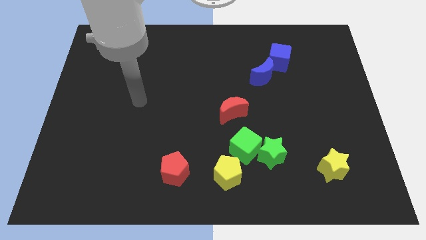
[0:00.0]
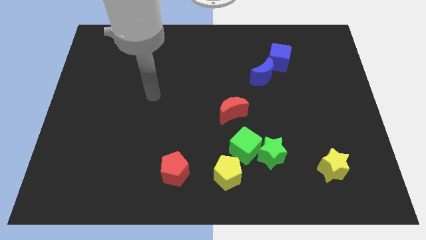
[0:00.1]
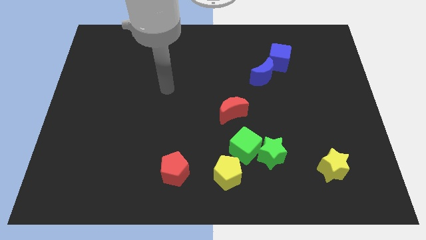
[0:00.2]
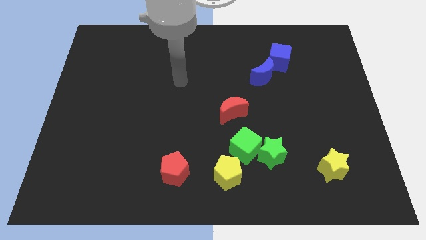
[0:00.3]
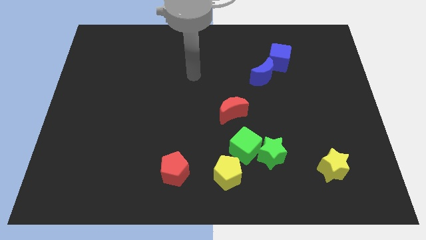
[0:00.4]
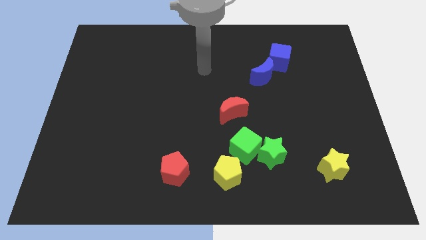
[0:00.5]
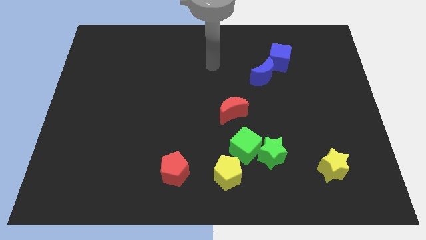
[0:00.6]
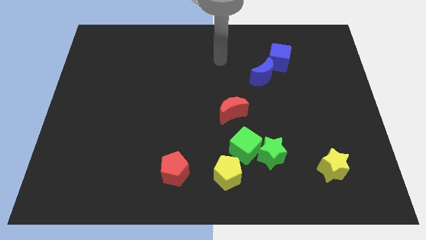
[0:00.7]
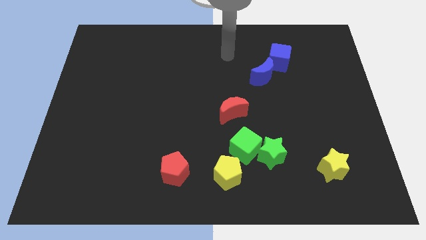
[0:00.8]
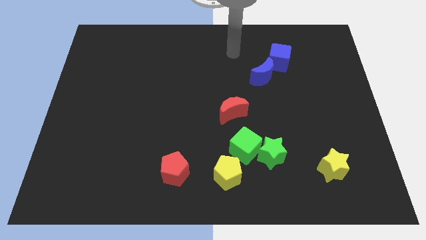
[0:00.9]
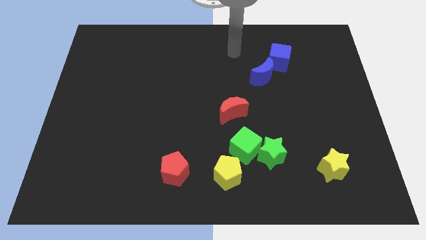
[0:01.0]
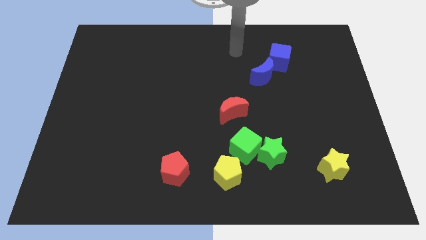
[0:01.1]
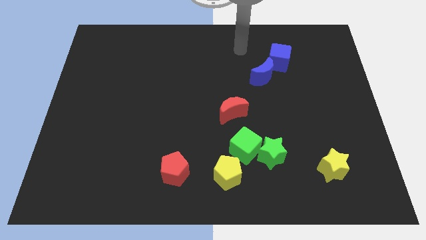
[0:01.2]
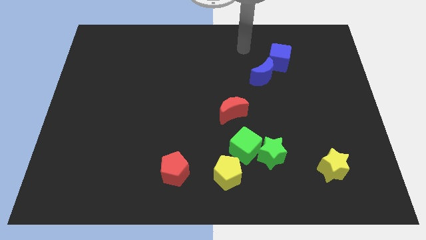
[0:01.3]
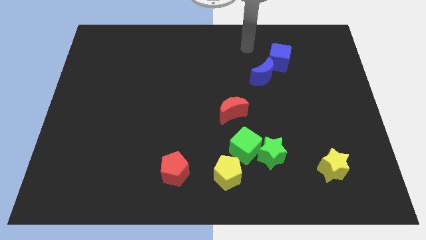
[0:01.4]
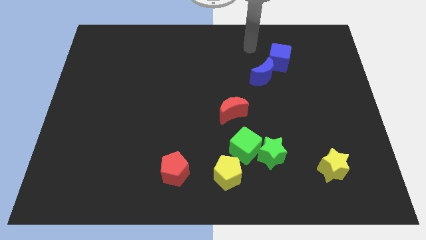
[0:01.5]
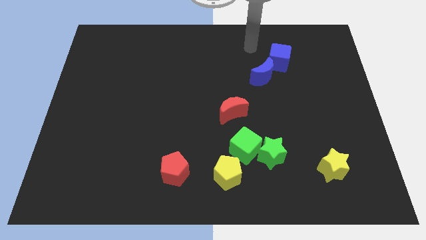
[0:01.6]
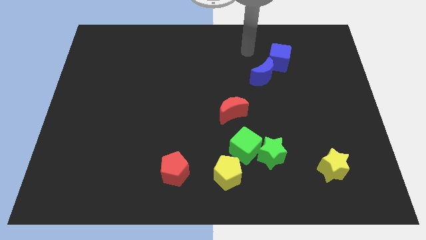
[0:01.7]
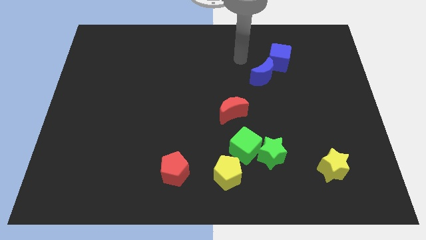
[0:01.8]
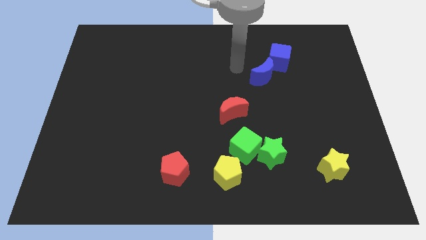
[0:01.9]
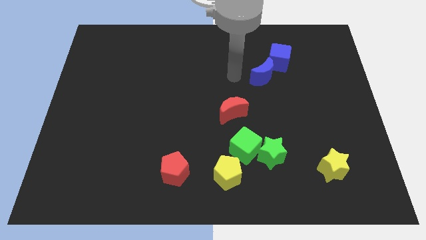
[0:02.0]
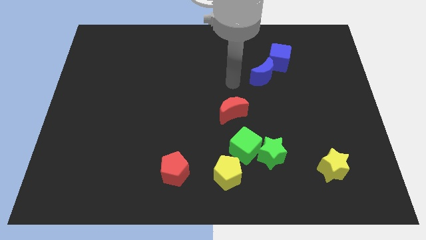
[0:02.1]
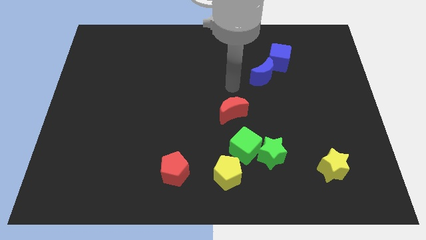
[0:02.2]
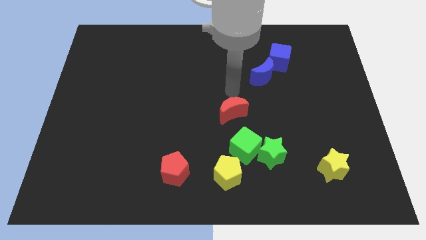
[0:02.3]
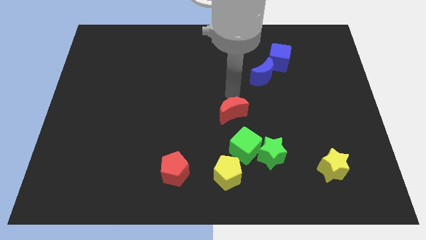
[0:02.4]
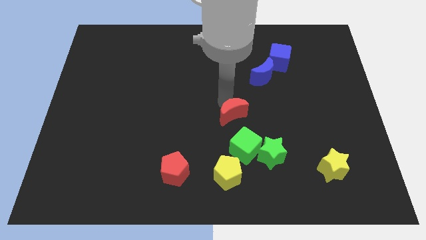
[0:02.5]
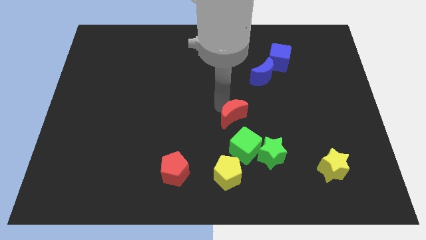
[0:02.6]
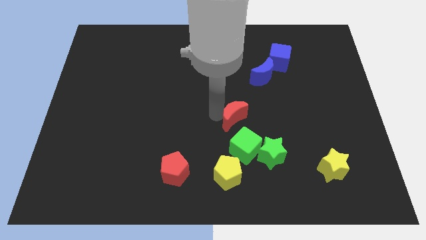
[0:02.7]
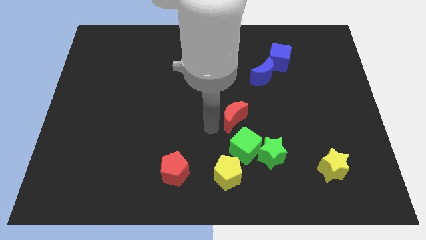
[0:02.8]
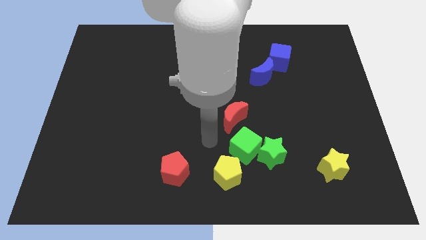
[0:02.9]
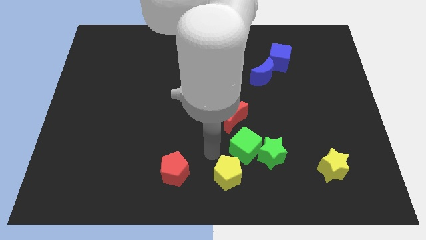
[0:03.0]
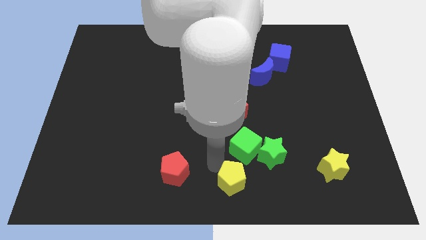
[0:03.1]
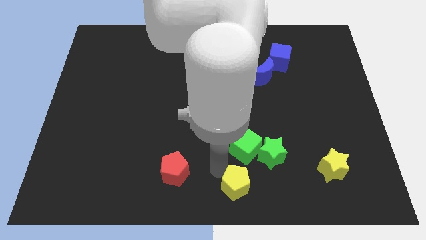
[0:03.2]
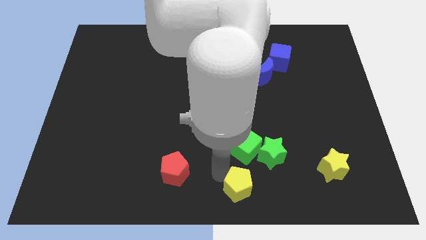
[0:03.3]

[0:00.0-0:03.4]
move the arm towards the yellow pentagon

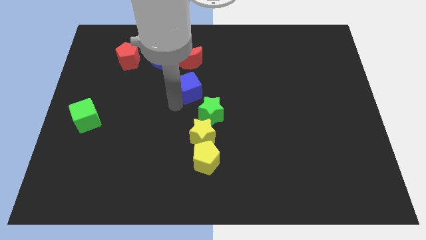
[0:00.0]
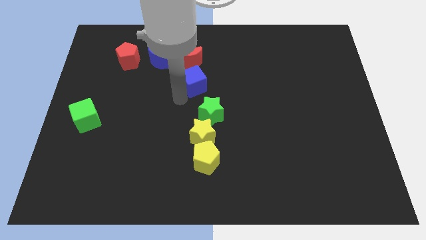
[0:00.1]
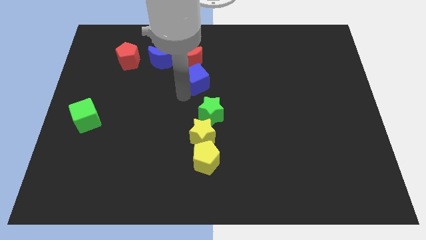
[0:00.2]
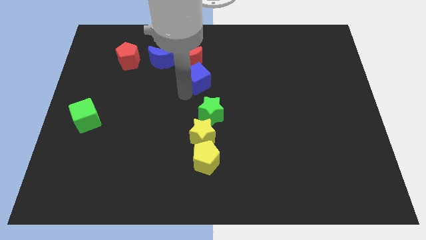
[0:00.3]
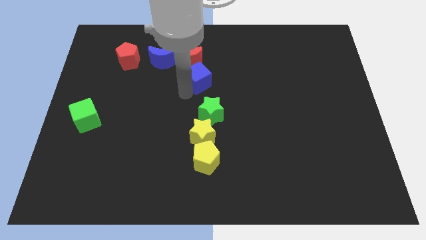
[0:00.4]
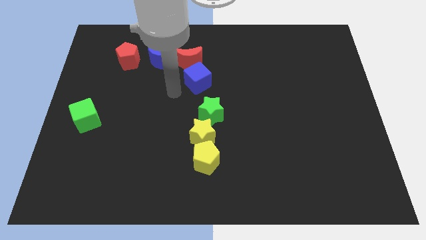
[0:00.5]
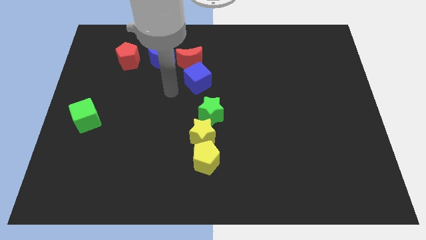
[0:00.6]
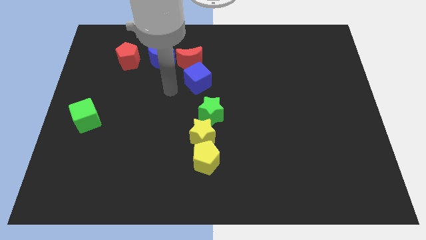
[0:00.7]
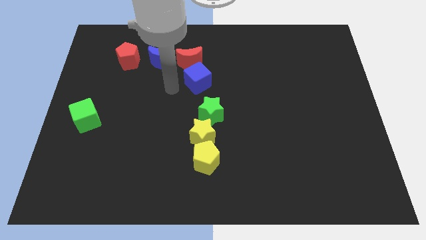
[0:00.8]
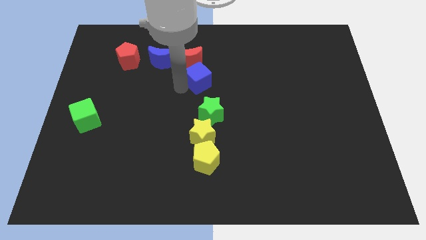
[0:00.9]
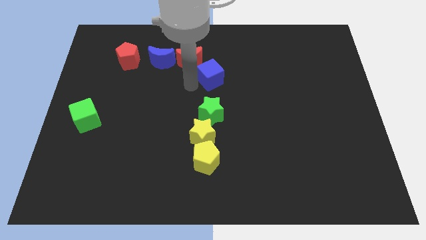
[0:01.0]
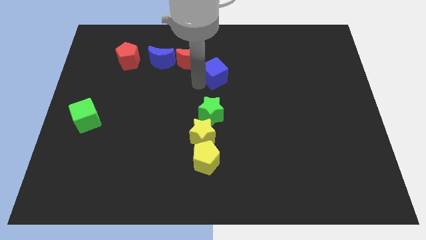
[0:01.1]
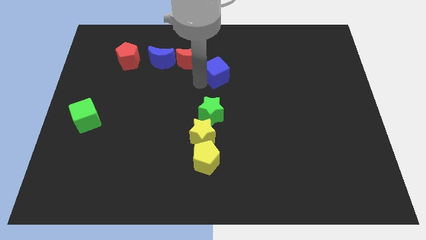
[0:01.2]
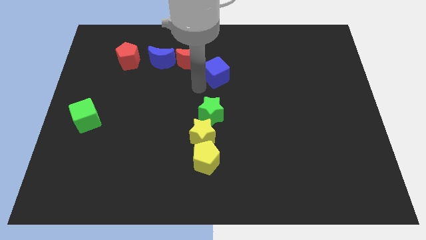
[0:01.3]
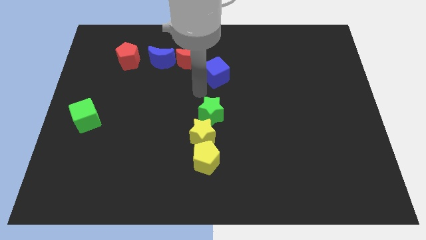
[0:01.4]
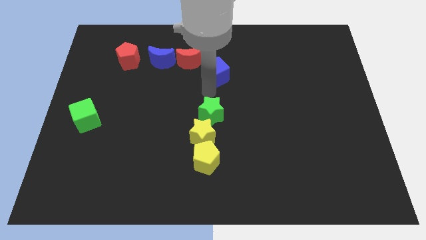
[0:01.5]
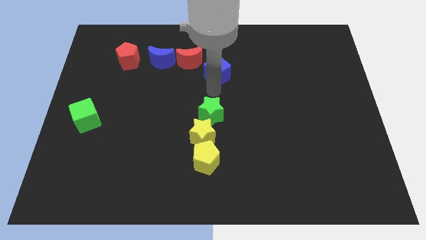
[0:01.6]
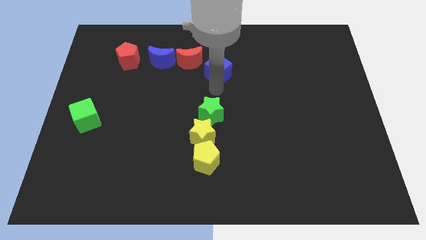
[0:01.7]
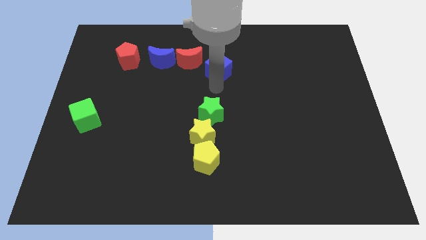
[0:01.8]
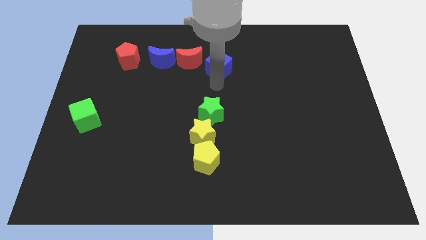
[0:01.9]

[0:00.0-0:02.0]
move the blue cube to the top side of the green star

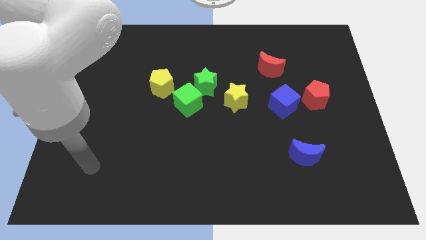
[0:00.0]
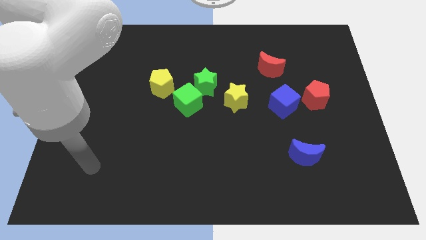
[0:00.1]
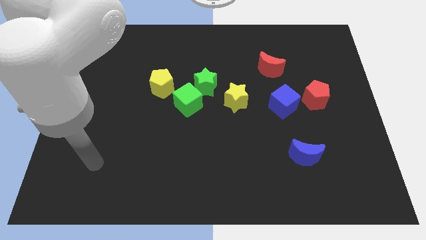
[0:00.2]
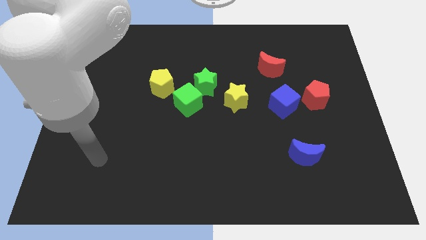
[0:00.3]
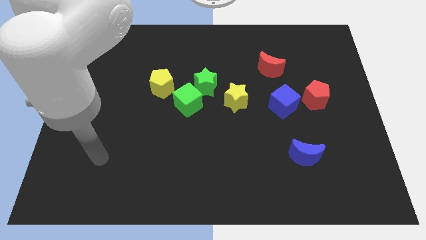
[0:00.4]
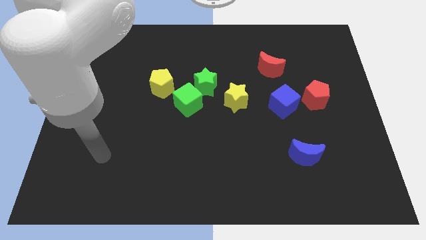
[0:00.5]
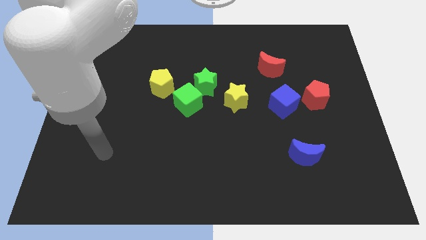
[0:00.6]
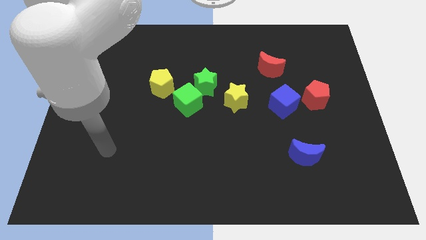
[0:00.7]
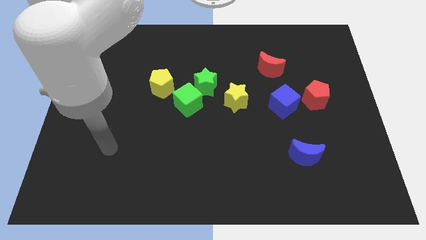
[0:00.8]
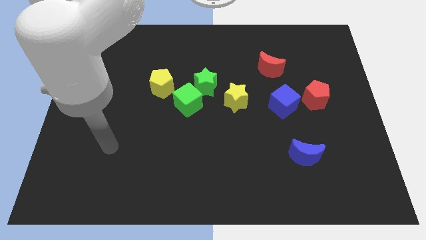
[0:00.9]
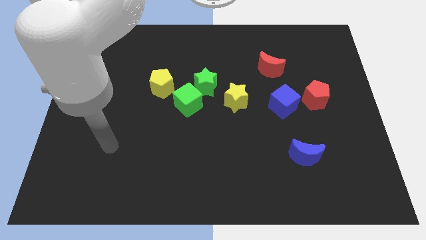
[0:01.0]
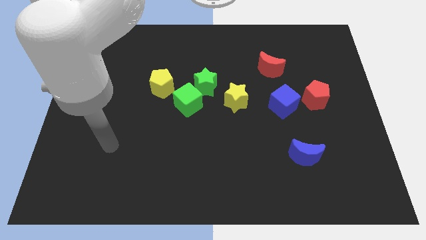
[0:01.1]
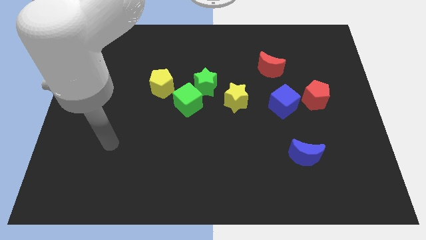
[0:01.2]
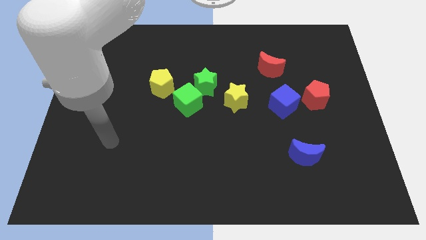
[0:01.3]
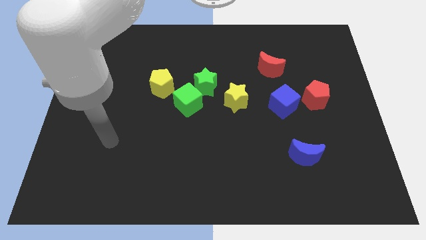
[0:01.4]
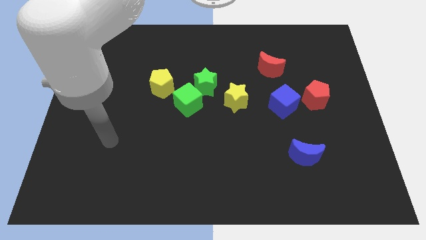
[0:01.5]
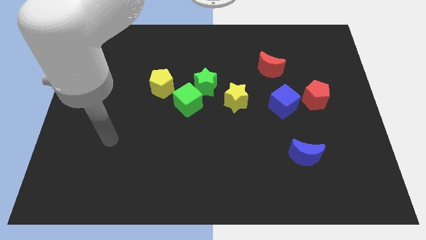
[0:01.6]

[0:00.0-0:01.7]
move your hand slightly up

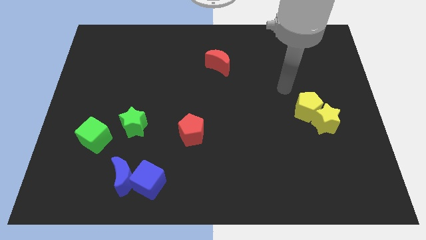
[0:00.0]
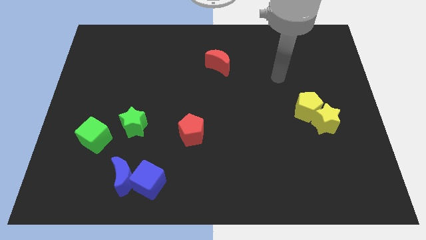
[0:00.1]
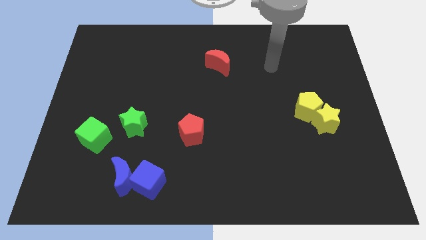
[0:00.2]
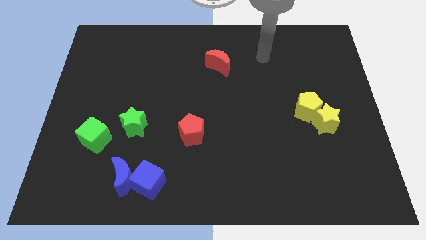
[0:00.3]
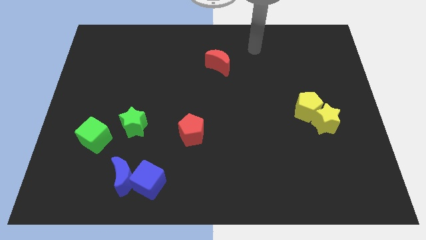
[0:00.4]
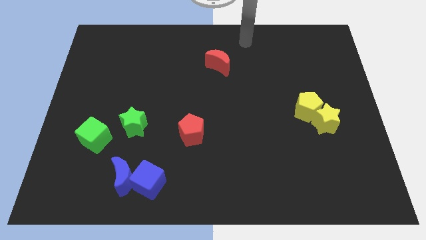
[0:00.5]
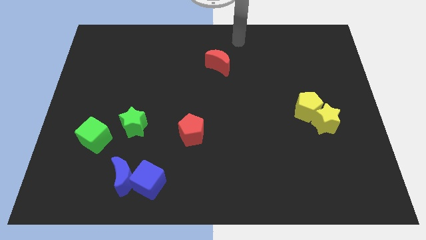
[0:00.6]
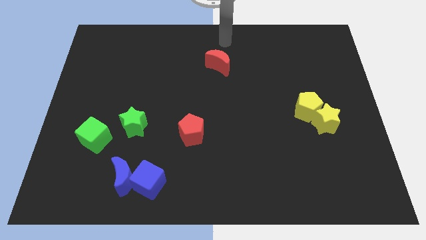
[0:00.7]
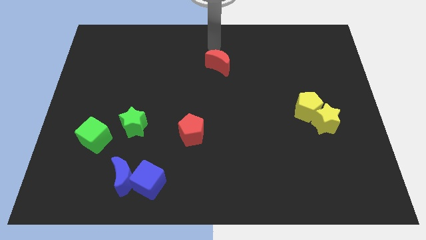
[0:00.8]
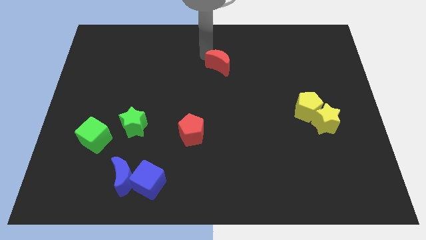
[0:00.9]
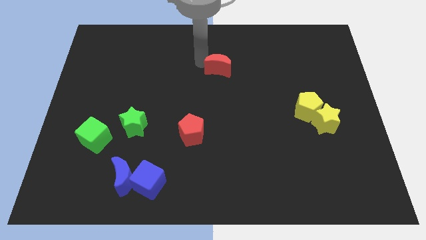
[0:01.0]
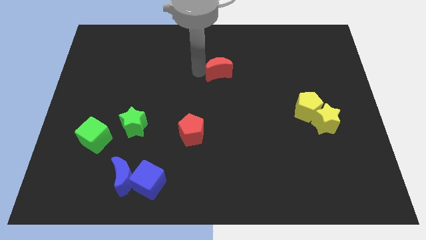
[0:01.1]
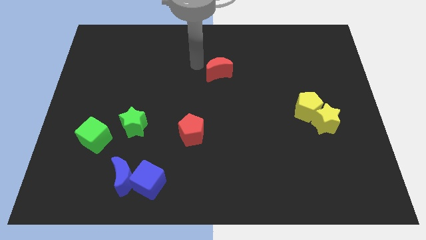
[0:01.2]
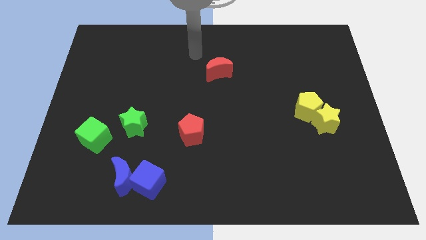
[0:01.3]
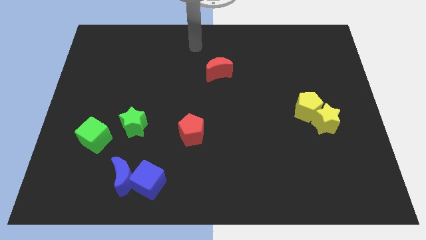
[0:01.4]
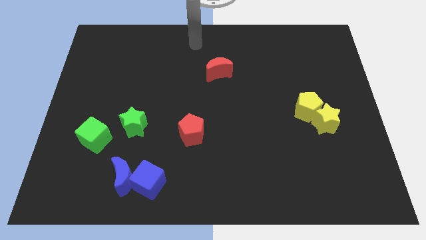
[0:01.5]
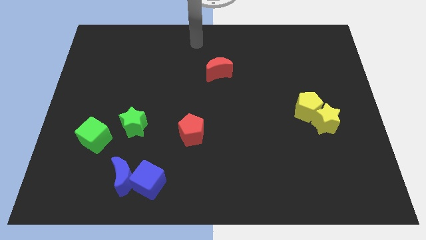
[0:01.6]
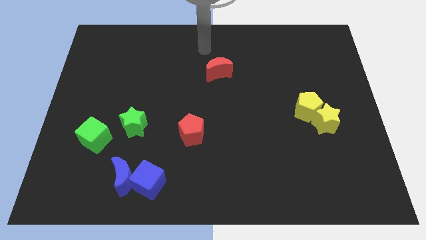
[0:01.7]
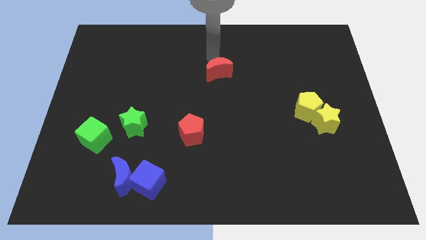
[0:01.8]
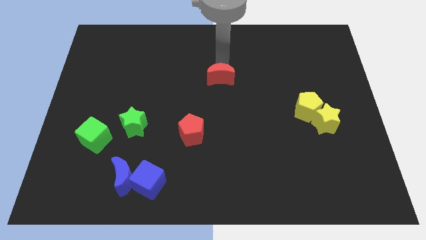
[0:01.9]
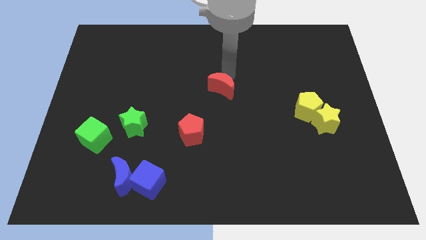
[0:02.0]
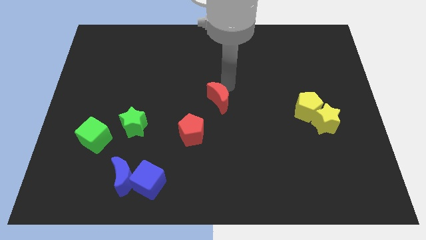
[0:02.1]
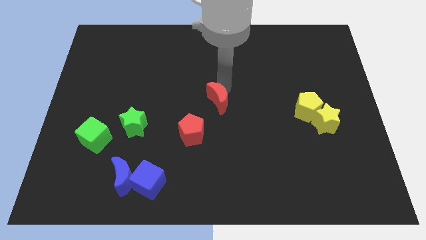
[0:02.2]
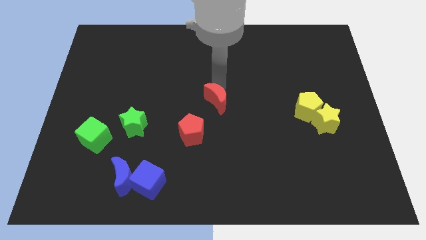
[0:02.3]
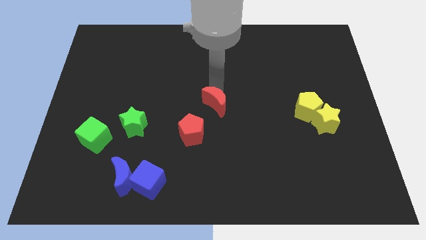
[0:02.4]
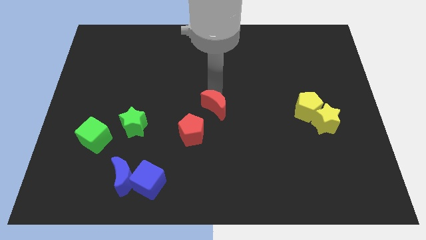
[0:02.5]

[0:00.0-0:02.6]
place the red crescent at the center of the board
